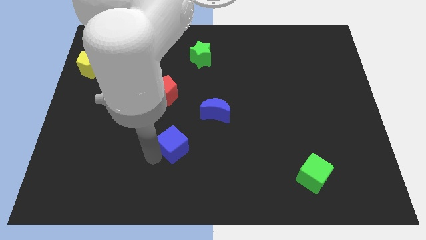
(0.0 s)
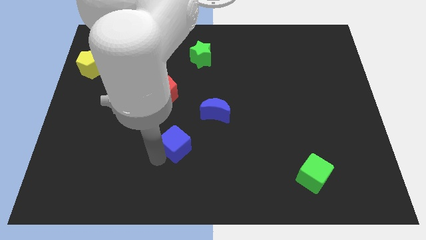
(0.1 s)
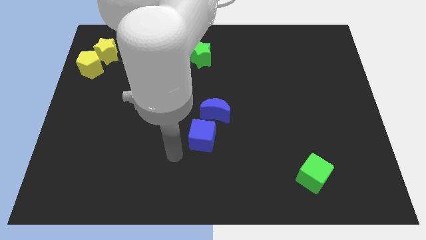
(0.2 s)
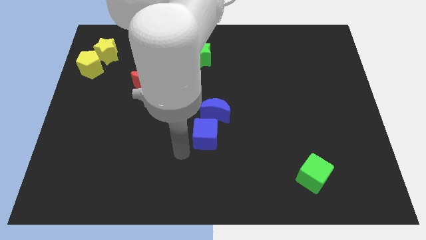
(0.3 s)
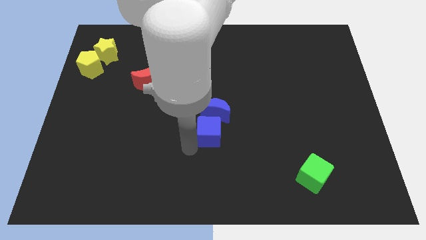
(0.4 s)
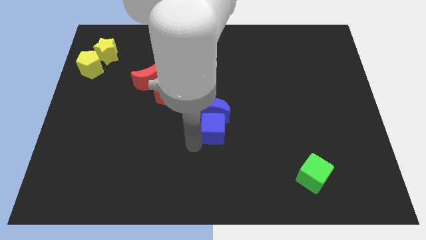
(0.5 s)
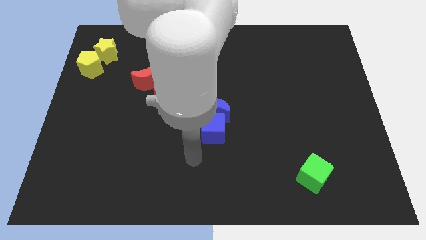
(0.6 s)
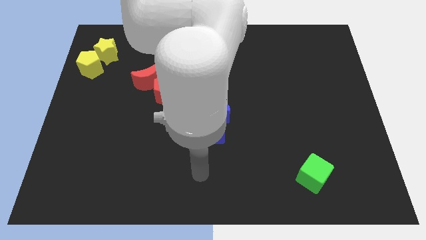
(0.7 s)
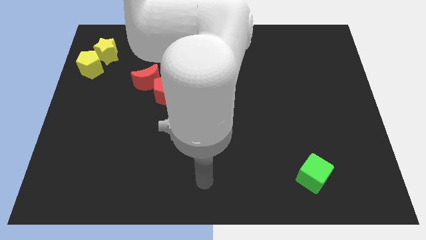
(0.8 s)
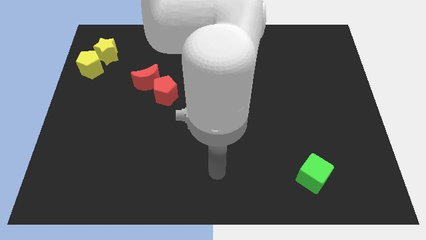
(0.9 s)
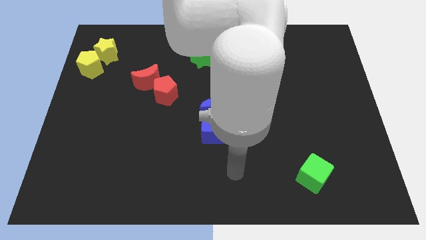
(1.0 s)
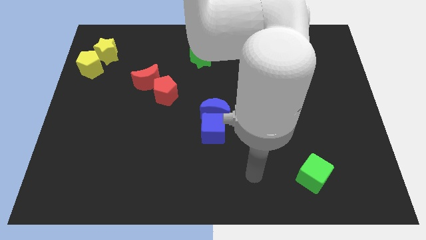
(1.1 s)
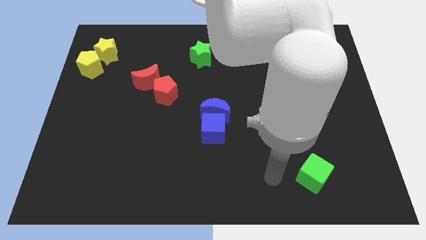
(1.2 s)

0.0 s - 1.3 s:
place the blue cube below the blue crescent

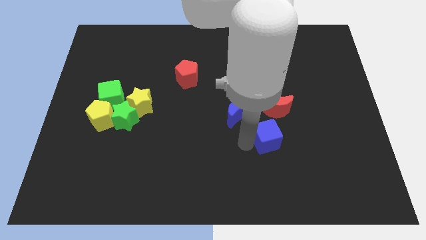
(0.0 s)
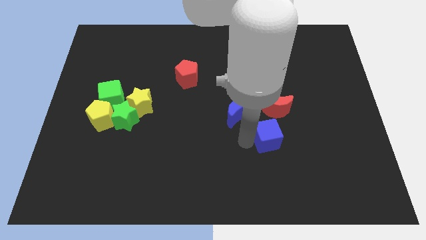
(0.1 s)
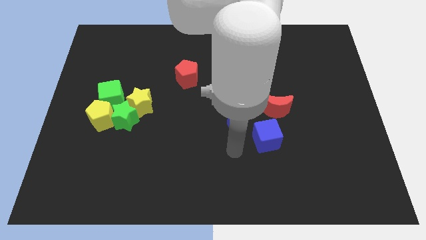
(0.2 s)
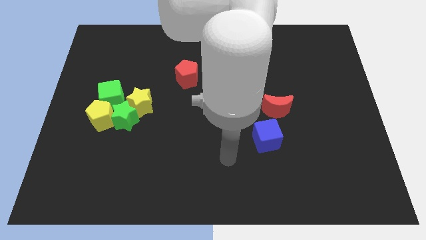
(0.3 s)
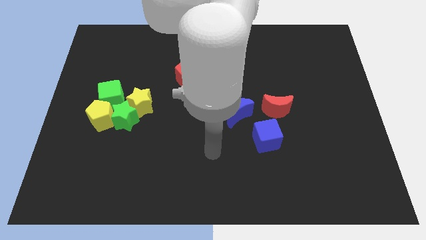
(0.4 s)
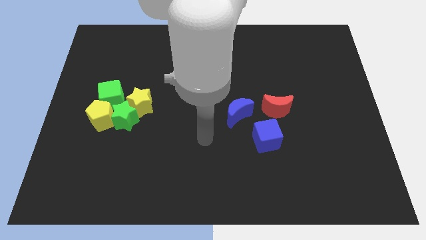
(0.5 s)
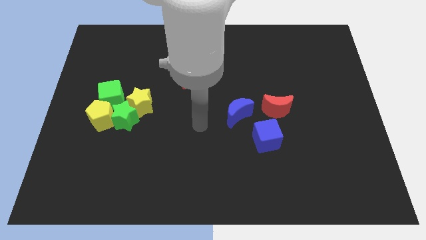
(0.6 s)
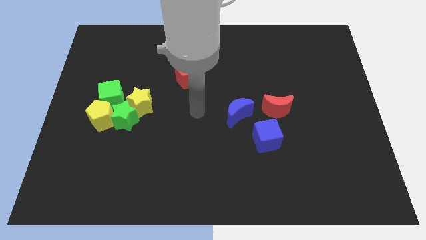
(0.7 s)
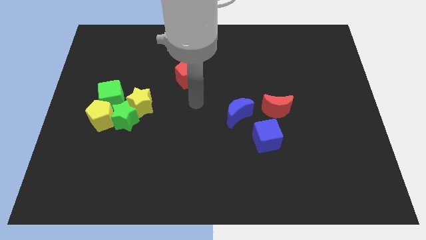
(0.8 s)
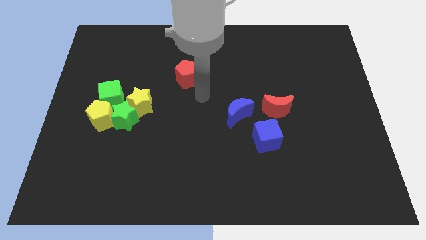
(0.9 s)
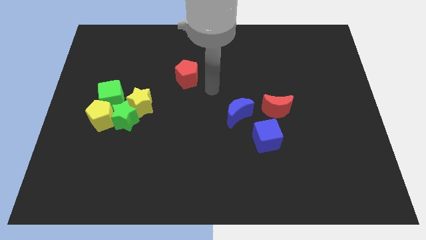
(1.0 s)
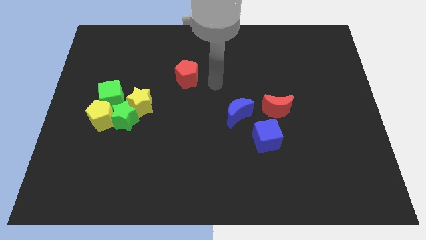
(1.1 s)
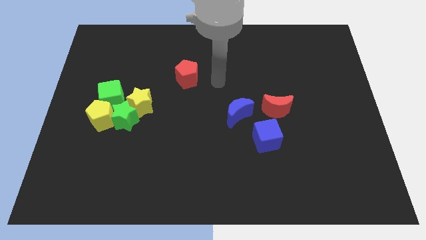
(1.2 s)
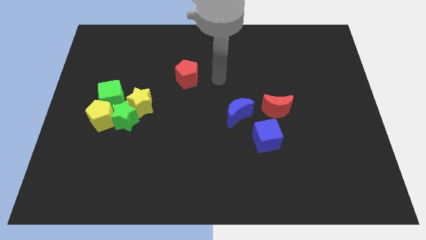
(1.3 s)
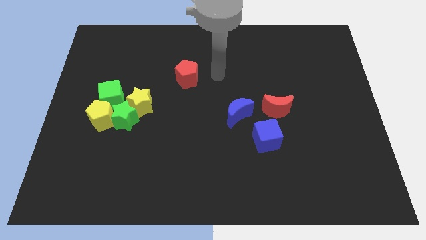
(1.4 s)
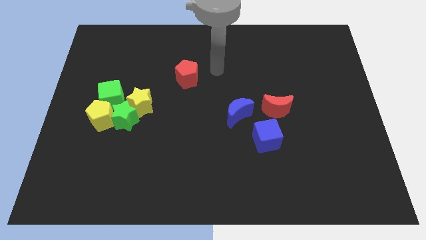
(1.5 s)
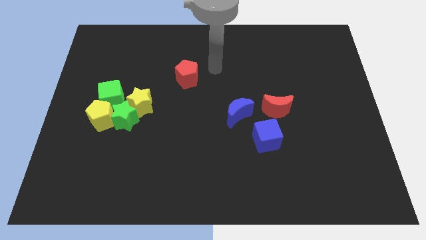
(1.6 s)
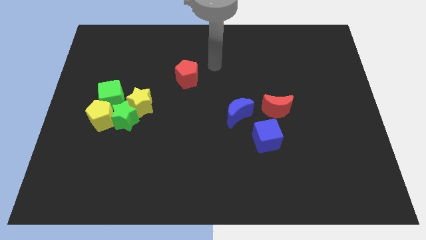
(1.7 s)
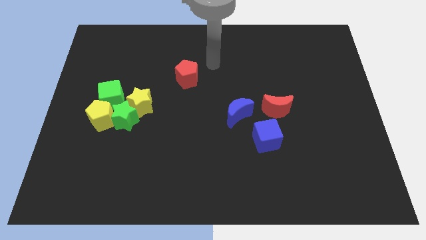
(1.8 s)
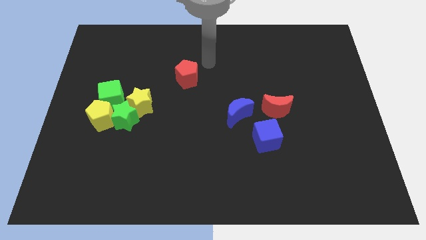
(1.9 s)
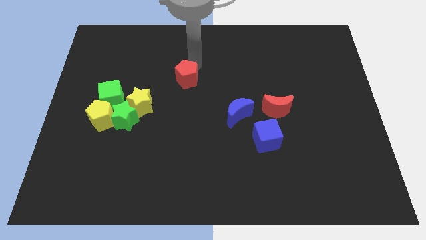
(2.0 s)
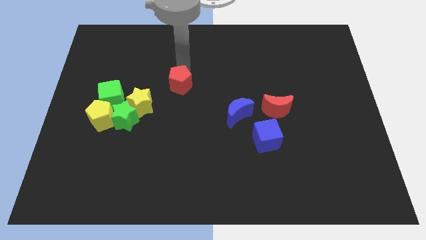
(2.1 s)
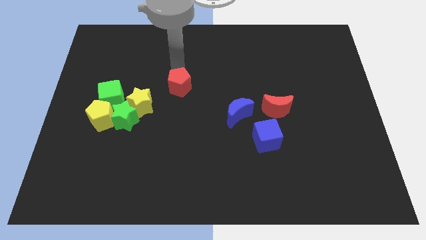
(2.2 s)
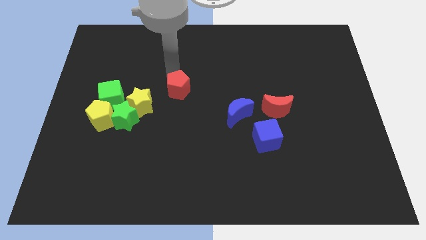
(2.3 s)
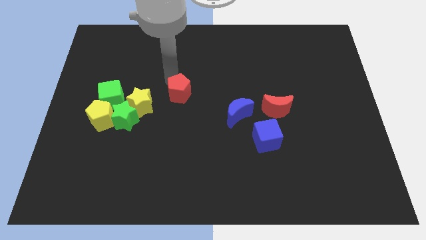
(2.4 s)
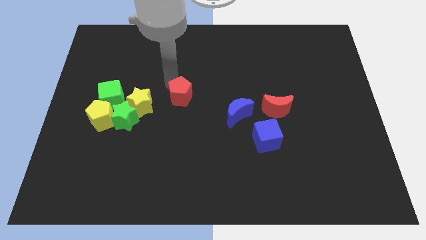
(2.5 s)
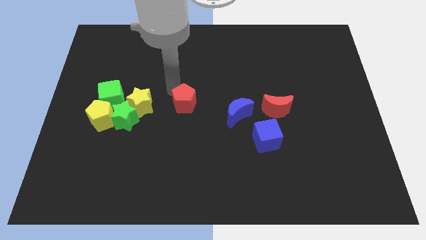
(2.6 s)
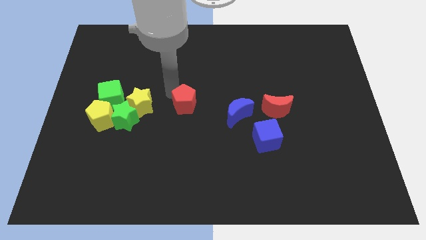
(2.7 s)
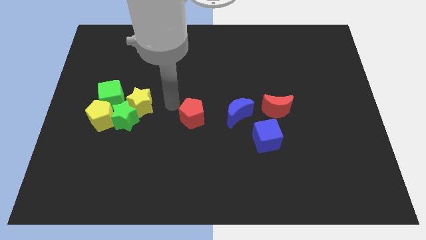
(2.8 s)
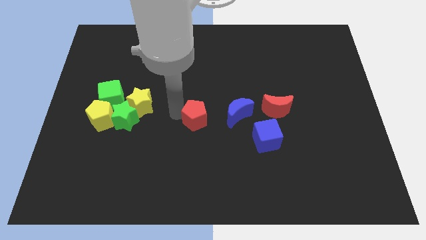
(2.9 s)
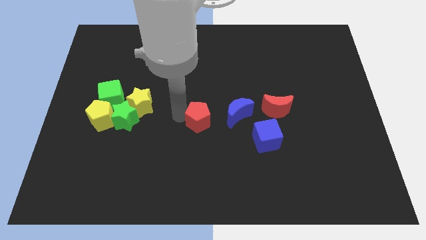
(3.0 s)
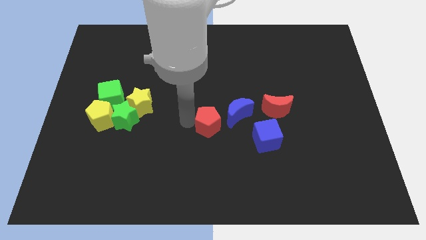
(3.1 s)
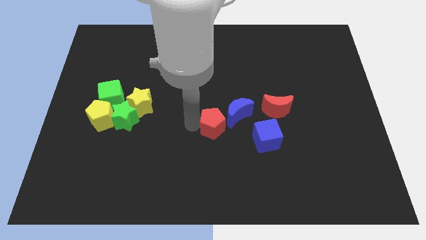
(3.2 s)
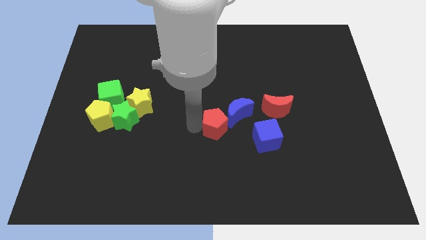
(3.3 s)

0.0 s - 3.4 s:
move the red pentagon towards the bottom center of the board

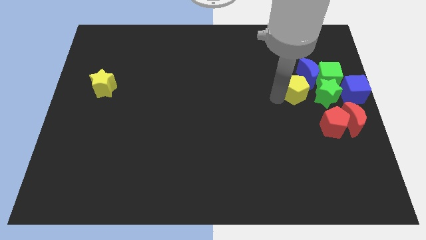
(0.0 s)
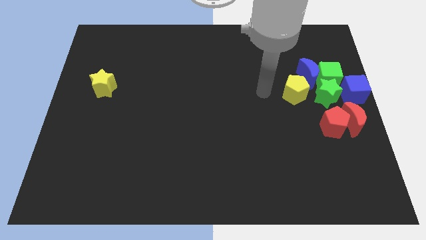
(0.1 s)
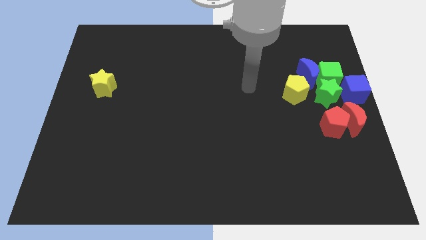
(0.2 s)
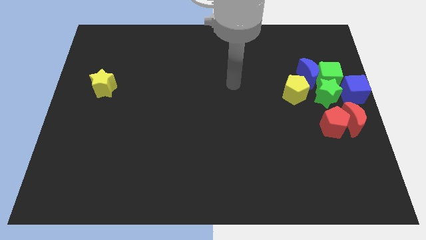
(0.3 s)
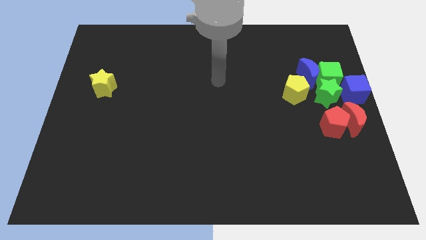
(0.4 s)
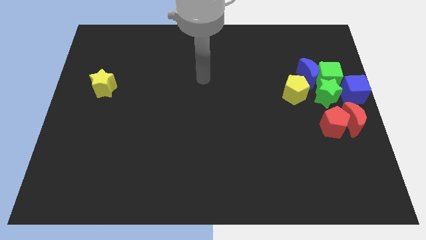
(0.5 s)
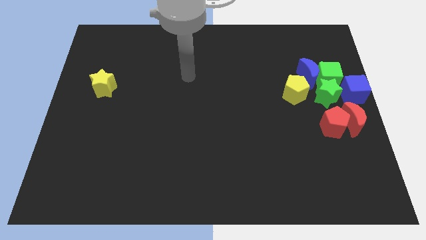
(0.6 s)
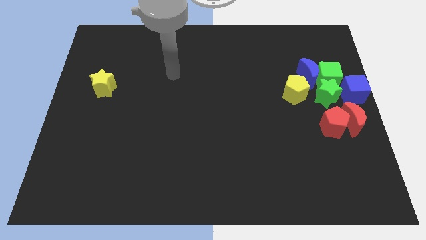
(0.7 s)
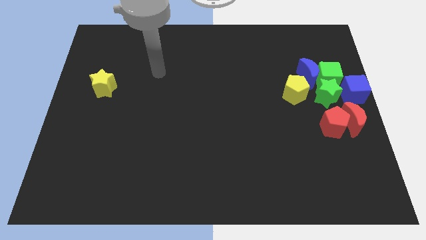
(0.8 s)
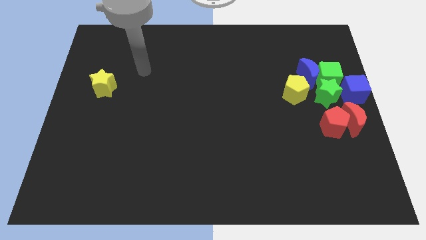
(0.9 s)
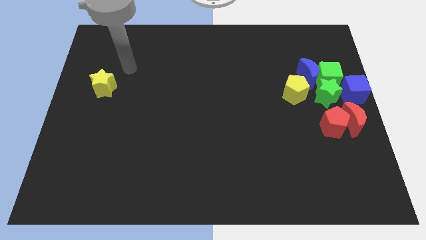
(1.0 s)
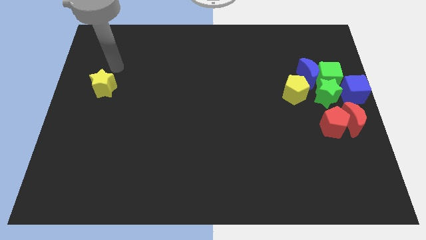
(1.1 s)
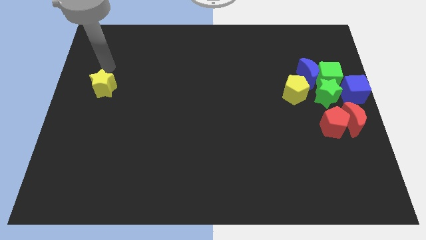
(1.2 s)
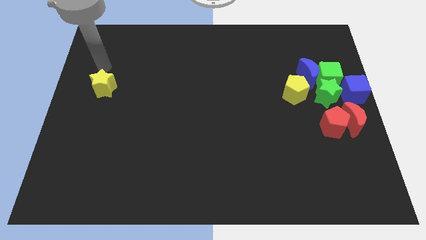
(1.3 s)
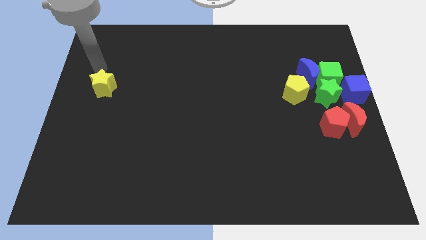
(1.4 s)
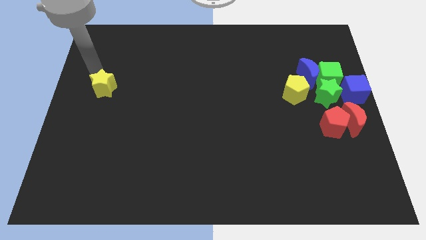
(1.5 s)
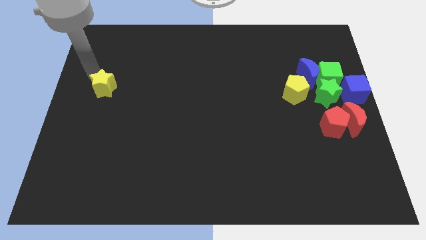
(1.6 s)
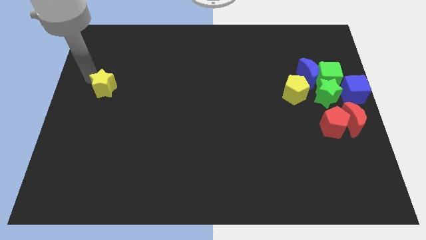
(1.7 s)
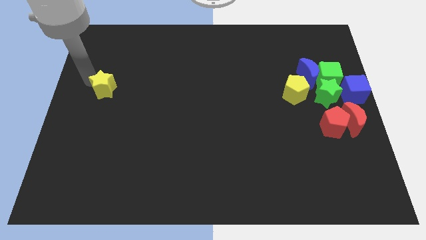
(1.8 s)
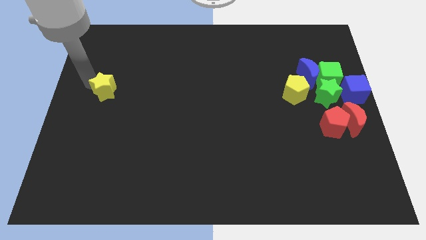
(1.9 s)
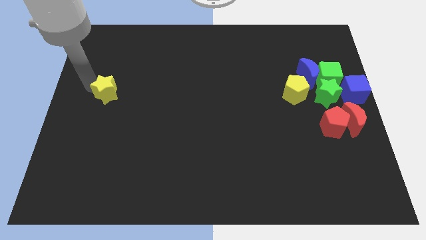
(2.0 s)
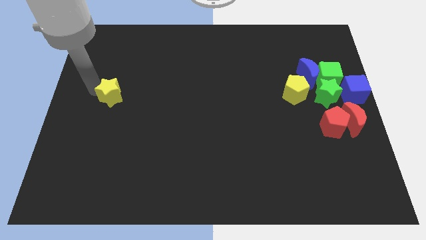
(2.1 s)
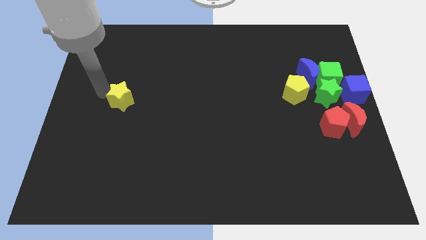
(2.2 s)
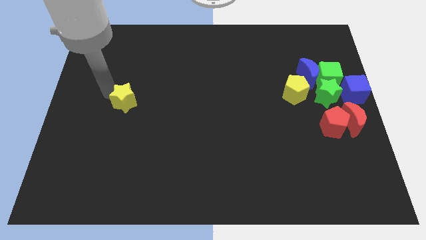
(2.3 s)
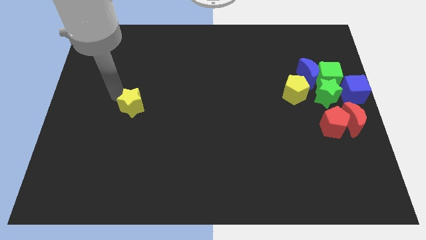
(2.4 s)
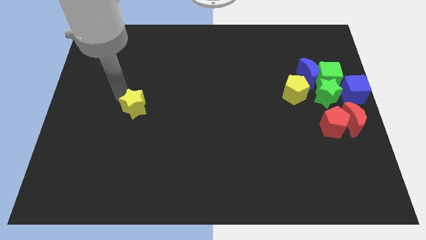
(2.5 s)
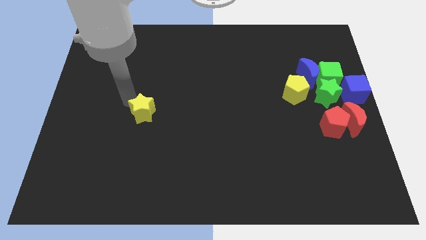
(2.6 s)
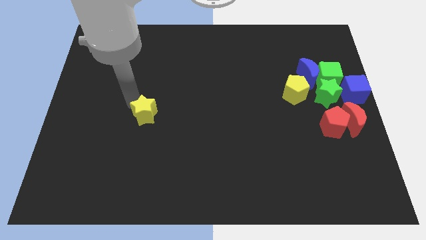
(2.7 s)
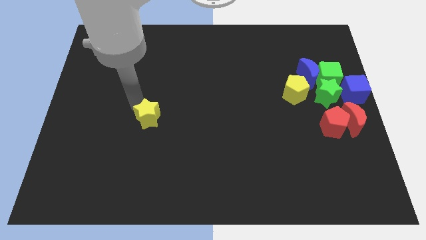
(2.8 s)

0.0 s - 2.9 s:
push the yellow star downwards slightly

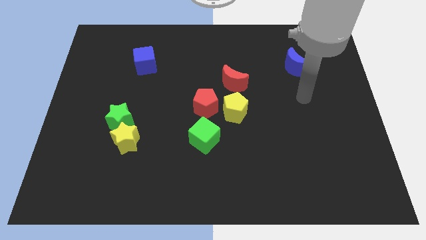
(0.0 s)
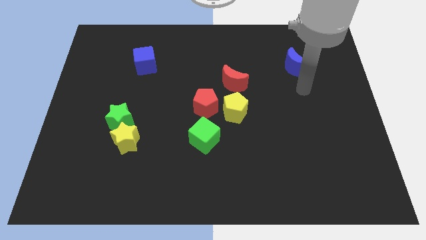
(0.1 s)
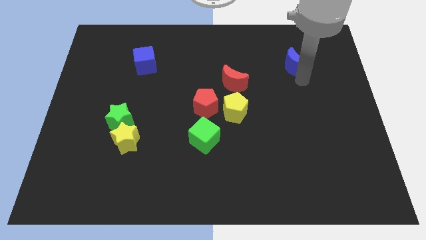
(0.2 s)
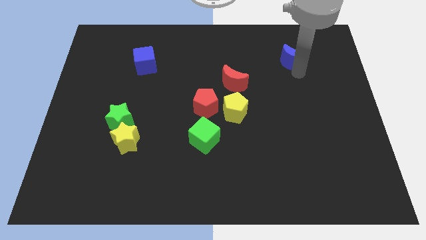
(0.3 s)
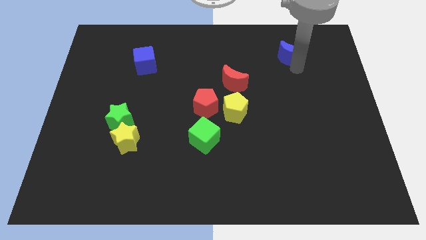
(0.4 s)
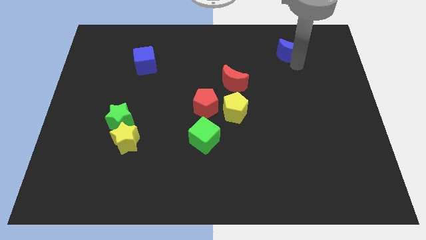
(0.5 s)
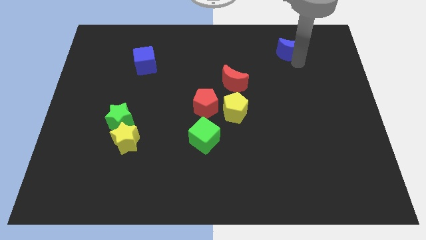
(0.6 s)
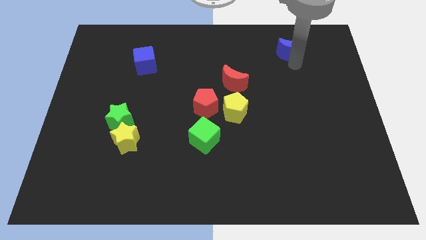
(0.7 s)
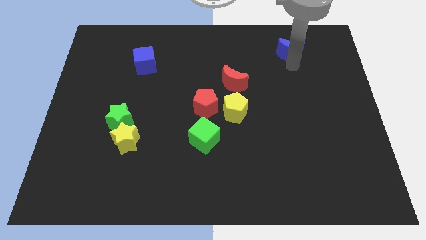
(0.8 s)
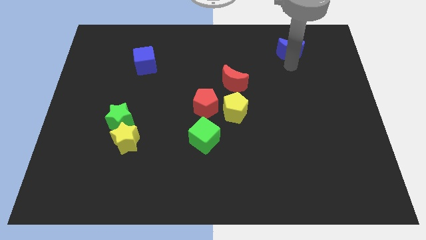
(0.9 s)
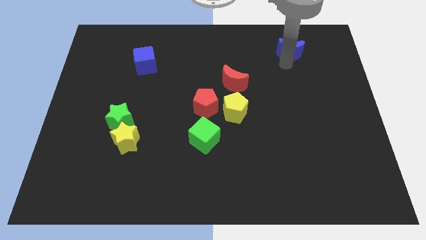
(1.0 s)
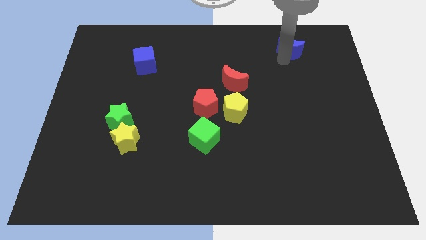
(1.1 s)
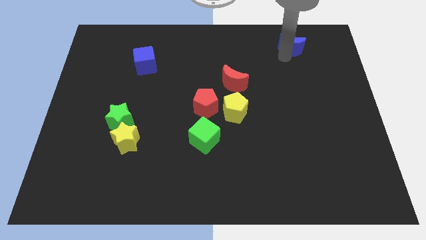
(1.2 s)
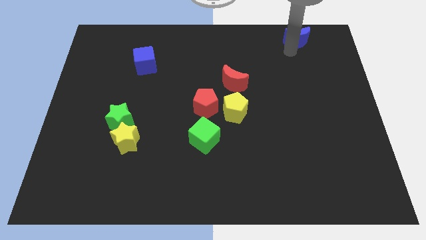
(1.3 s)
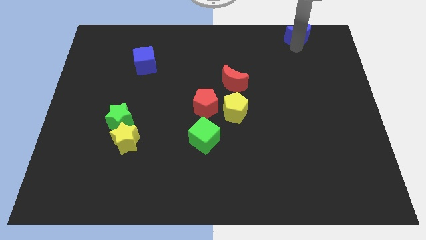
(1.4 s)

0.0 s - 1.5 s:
push the blue moon towards the top side of the board
